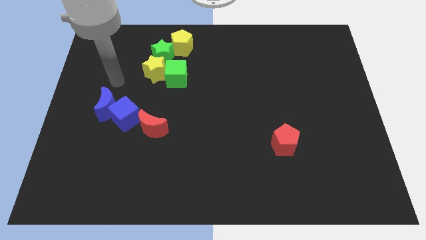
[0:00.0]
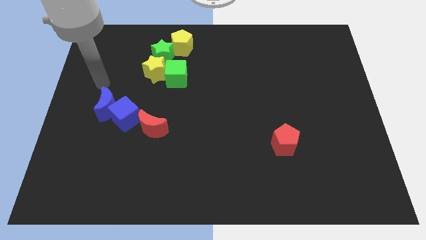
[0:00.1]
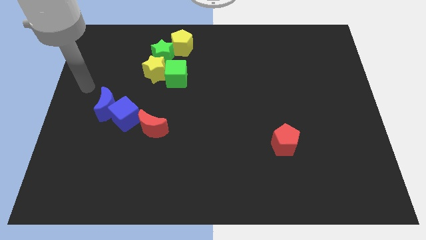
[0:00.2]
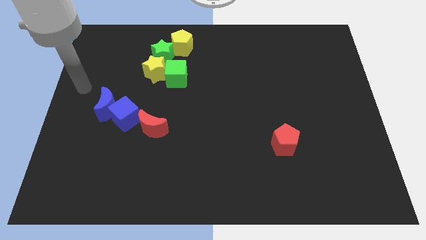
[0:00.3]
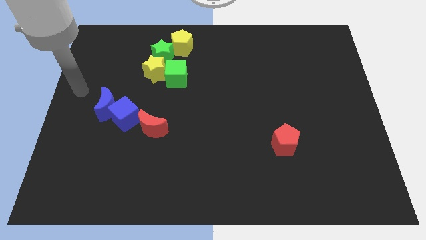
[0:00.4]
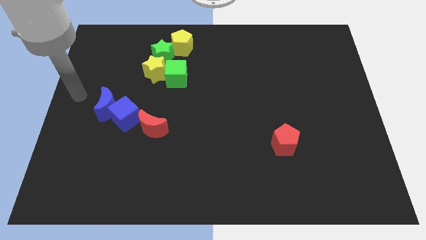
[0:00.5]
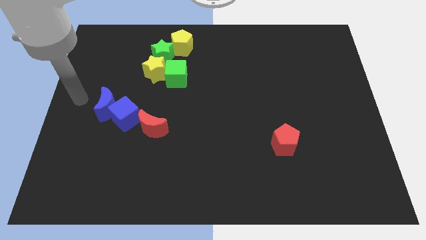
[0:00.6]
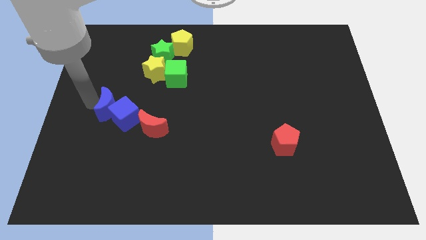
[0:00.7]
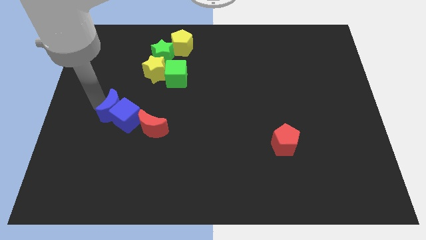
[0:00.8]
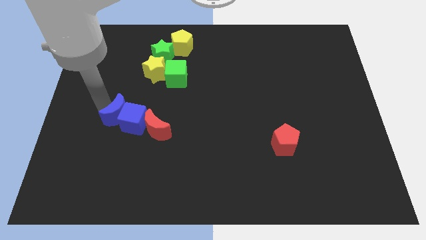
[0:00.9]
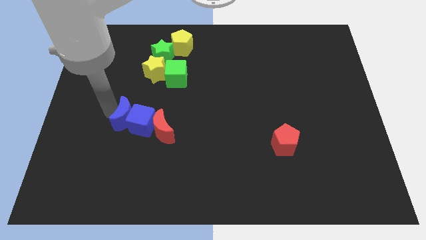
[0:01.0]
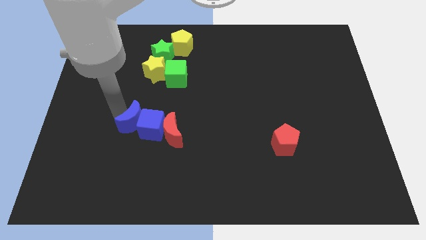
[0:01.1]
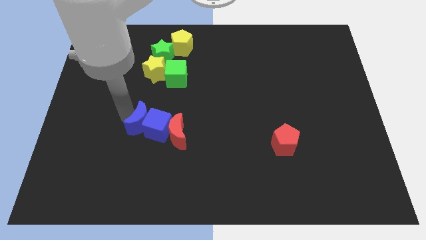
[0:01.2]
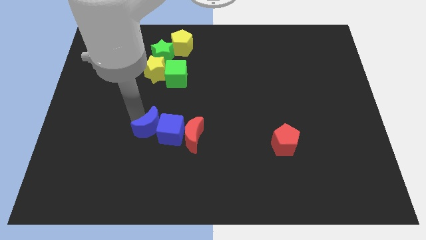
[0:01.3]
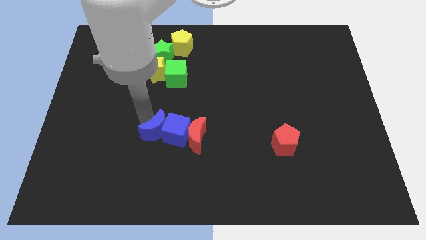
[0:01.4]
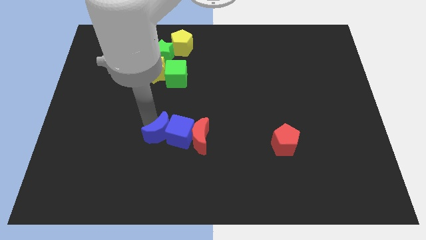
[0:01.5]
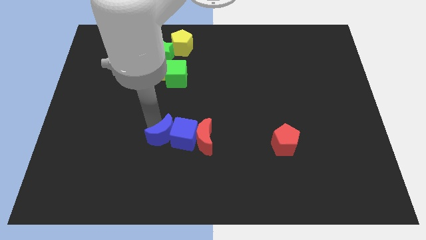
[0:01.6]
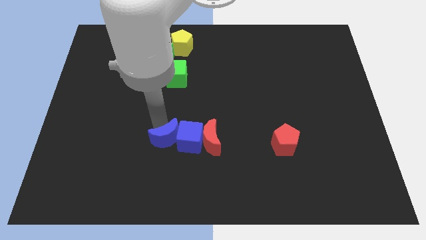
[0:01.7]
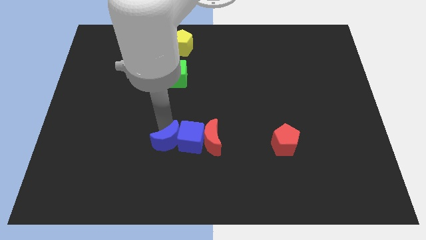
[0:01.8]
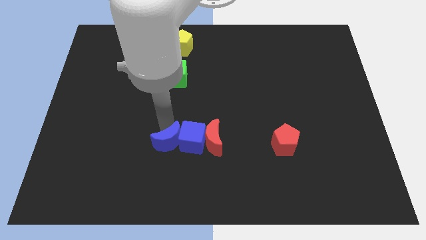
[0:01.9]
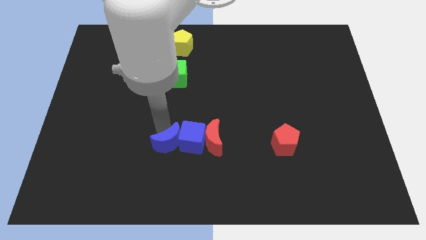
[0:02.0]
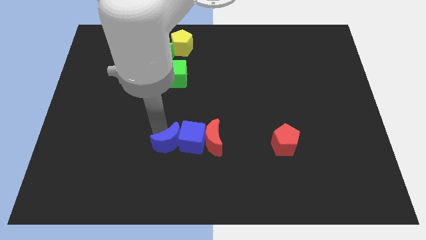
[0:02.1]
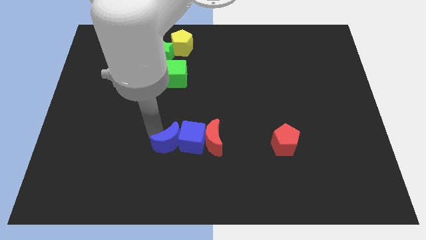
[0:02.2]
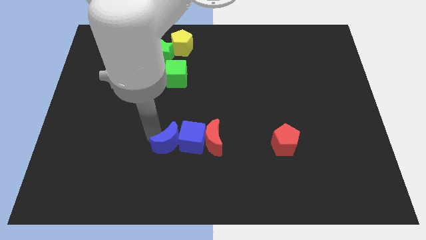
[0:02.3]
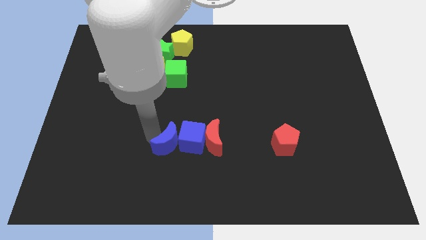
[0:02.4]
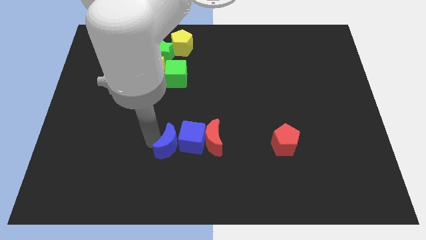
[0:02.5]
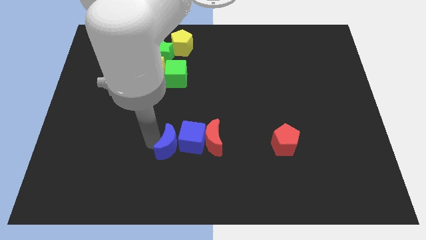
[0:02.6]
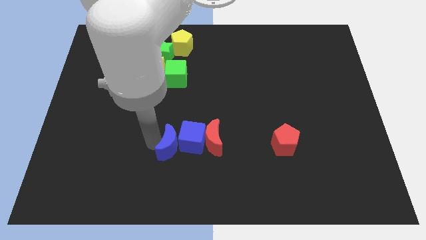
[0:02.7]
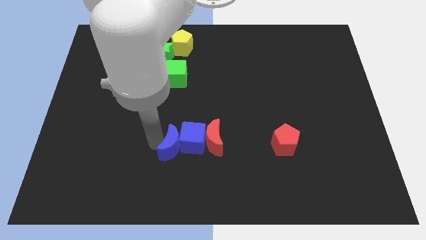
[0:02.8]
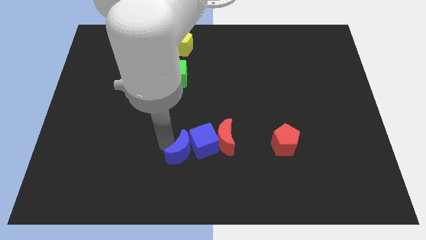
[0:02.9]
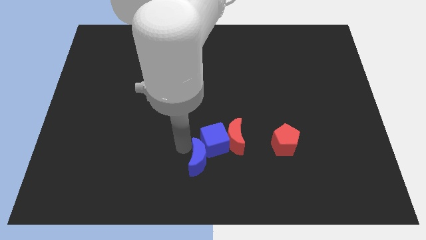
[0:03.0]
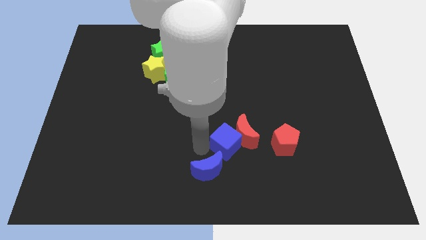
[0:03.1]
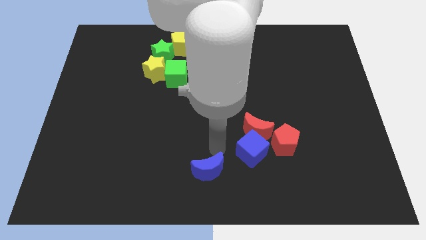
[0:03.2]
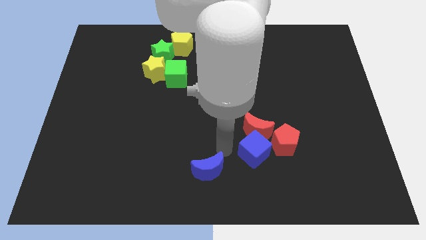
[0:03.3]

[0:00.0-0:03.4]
place the red pentagon to right side of red crescent

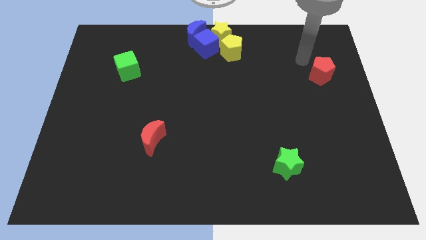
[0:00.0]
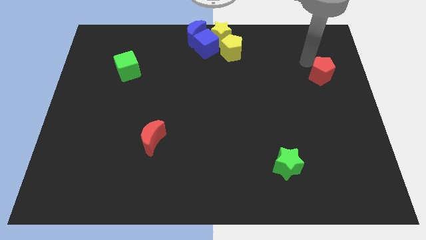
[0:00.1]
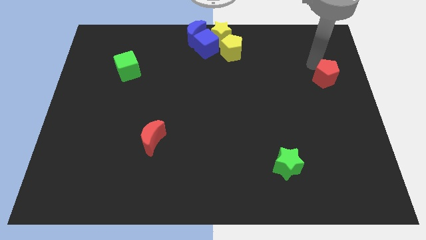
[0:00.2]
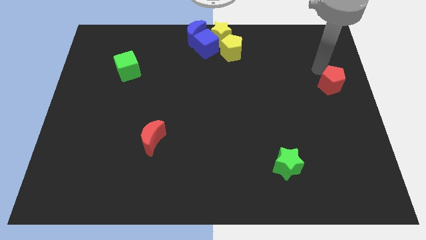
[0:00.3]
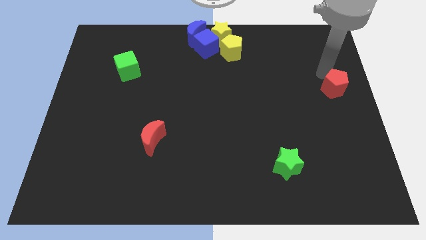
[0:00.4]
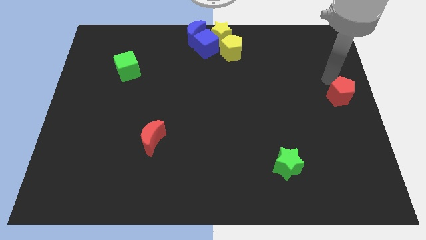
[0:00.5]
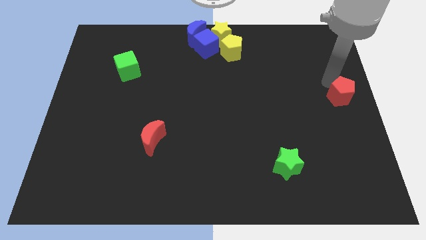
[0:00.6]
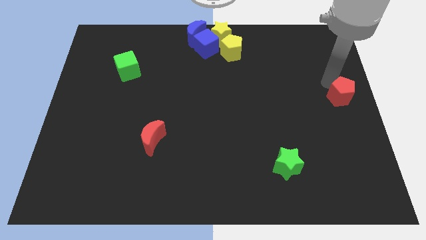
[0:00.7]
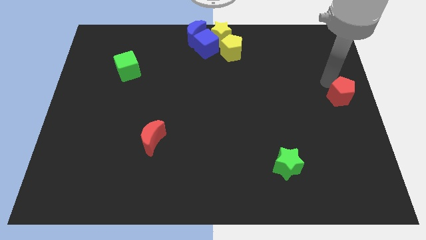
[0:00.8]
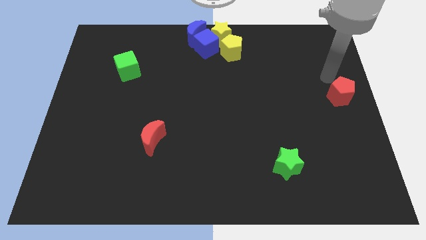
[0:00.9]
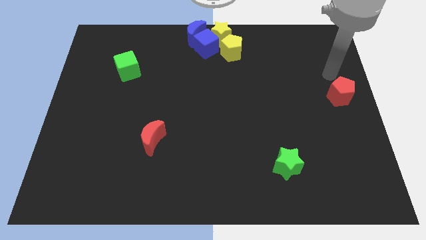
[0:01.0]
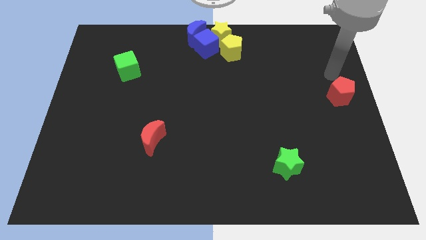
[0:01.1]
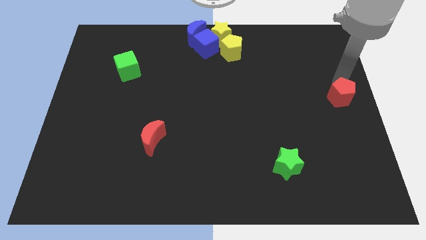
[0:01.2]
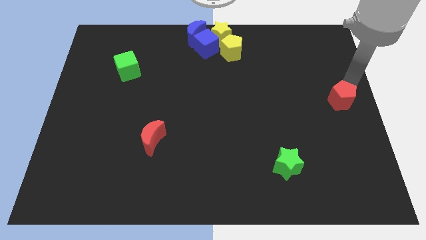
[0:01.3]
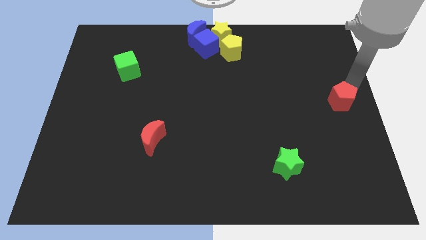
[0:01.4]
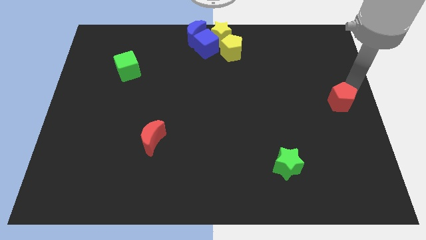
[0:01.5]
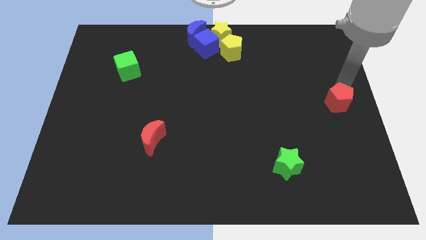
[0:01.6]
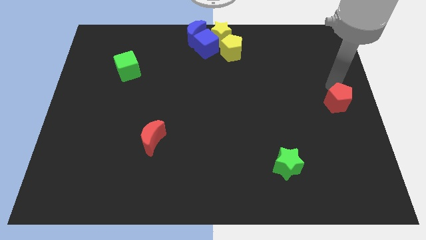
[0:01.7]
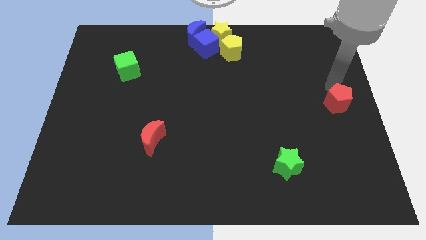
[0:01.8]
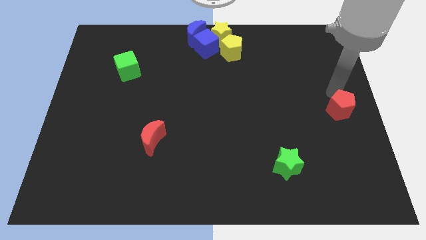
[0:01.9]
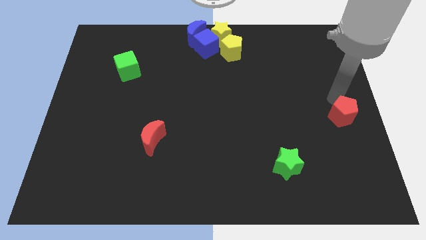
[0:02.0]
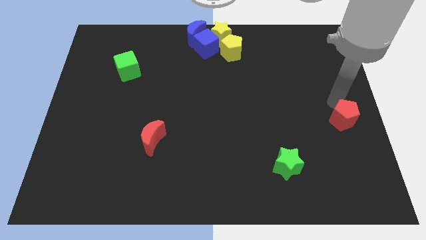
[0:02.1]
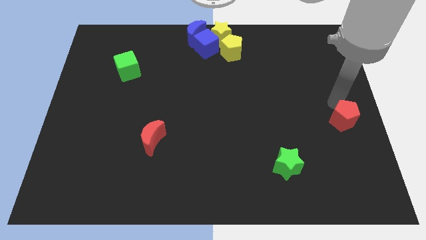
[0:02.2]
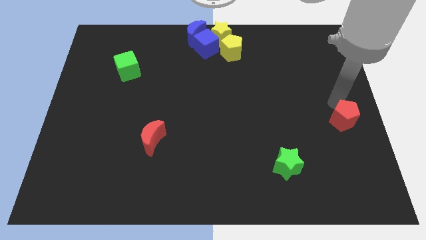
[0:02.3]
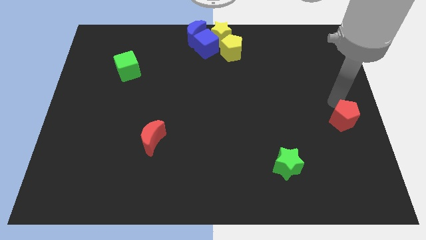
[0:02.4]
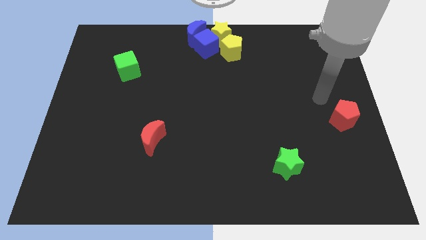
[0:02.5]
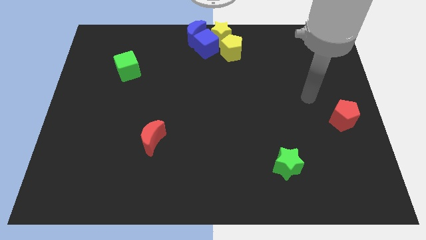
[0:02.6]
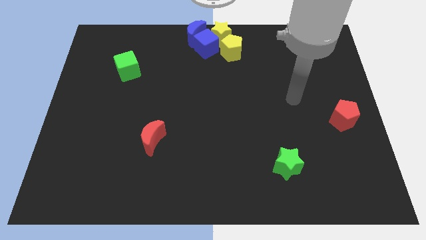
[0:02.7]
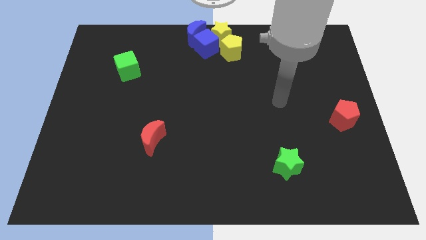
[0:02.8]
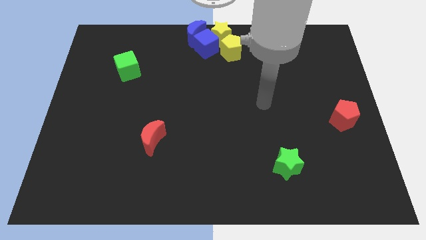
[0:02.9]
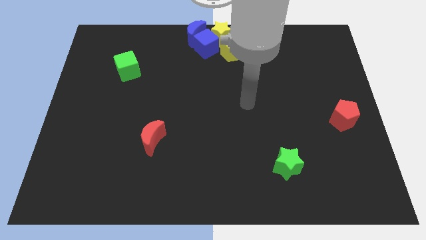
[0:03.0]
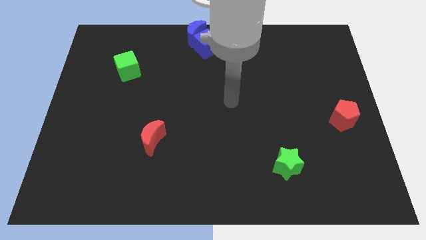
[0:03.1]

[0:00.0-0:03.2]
drag the red pentagon slightly downwards

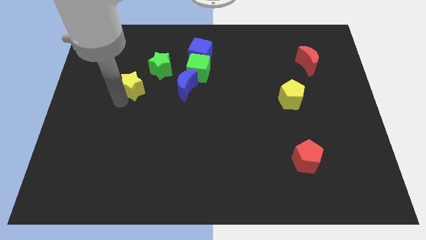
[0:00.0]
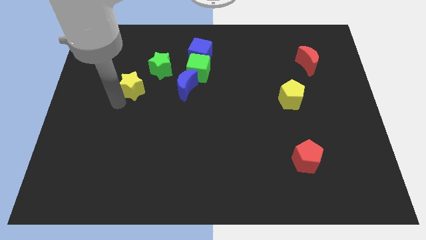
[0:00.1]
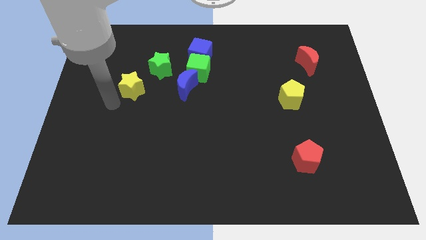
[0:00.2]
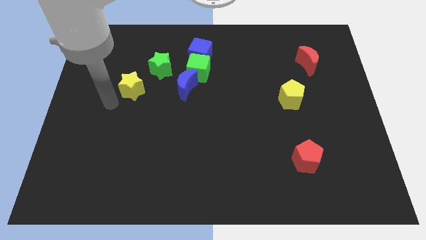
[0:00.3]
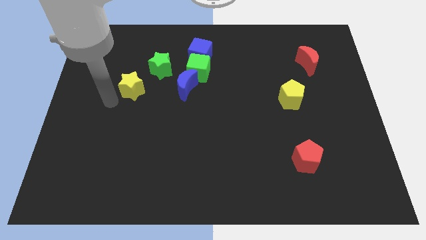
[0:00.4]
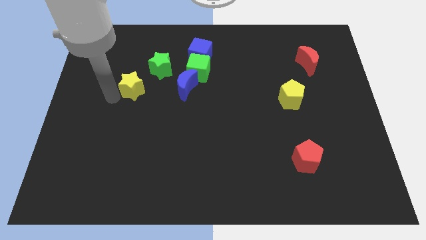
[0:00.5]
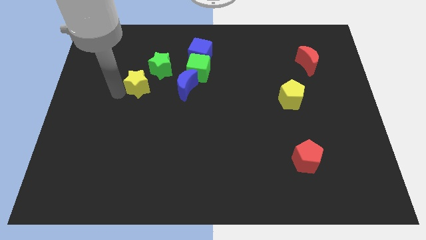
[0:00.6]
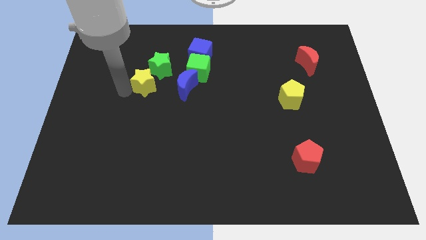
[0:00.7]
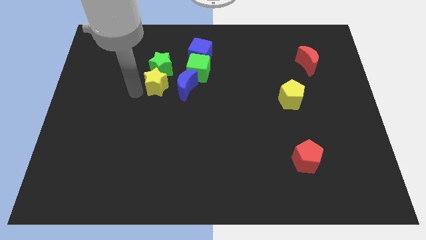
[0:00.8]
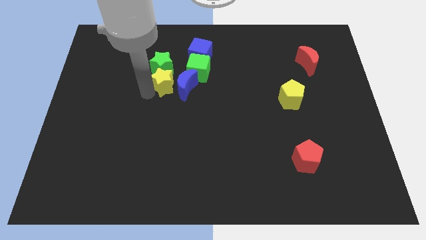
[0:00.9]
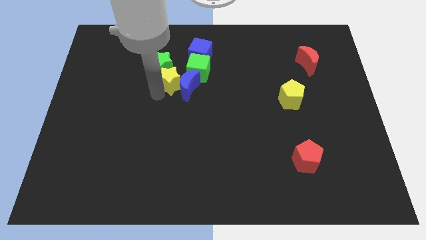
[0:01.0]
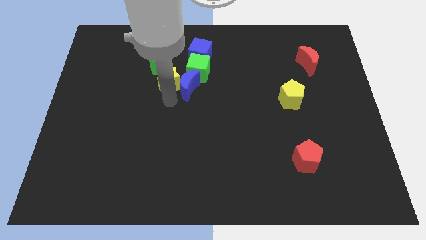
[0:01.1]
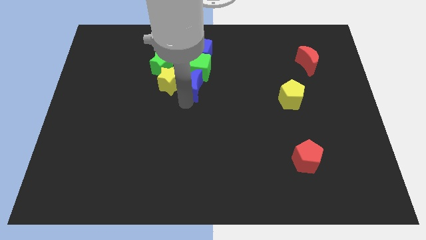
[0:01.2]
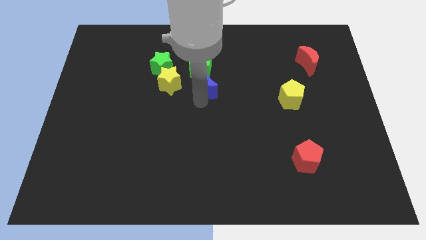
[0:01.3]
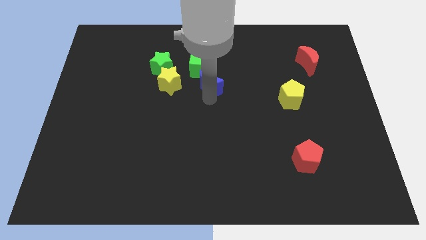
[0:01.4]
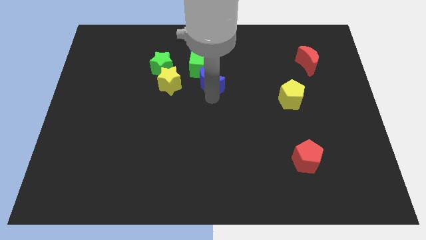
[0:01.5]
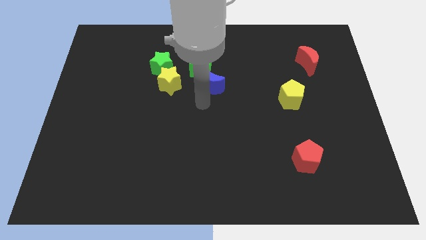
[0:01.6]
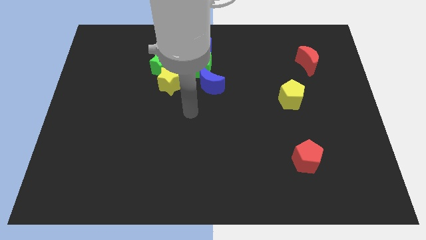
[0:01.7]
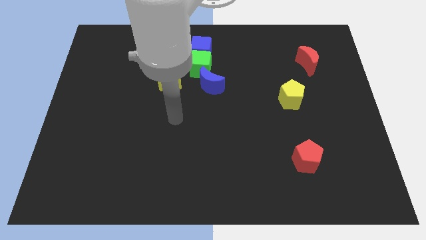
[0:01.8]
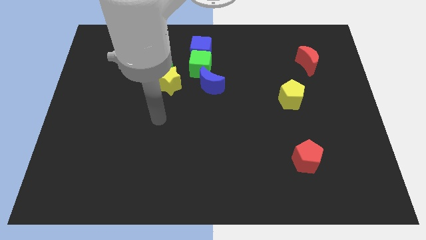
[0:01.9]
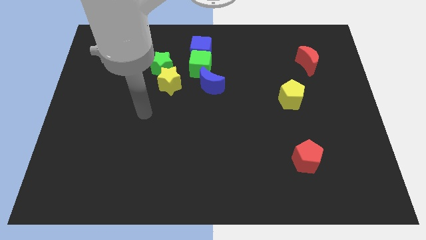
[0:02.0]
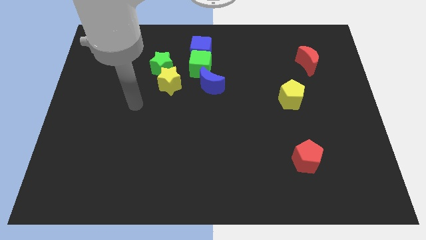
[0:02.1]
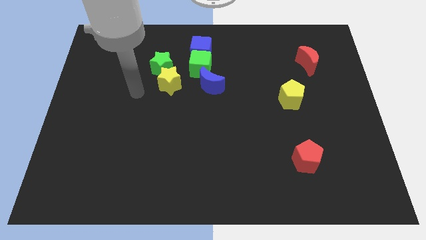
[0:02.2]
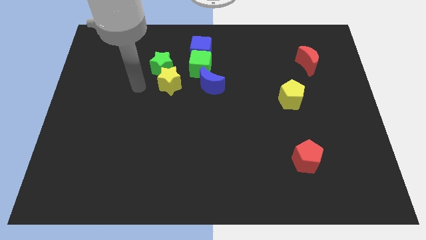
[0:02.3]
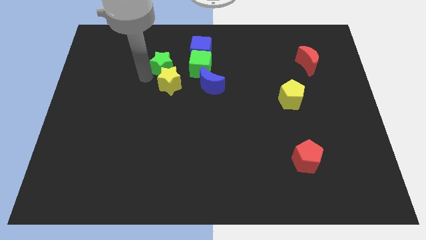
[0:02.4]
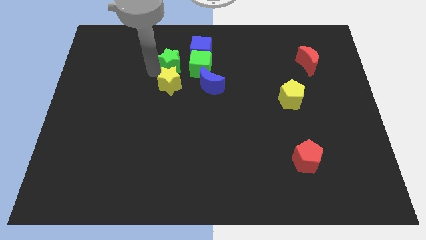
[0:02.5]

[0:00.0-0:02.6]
slightly push the blue moon right to the board
